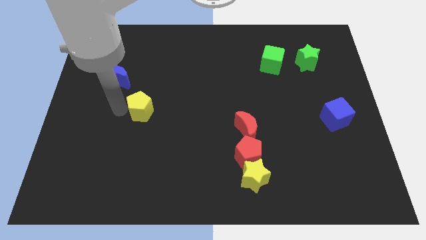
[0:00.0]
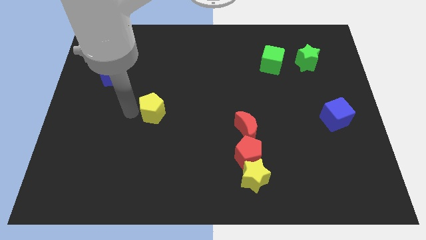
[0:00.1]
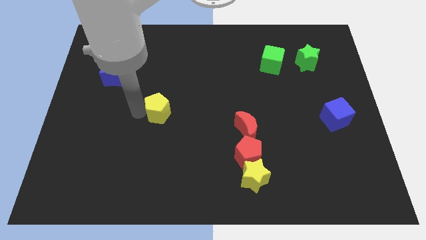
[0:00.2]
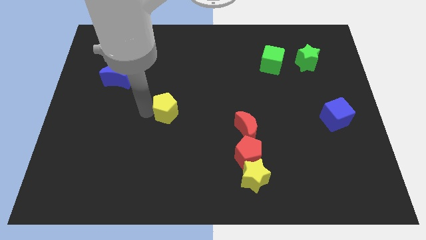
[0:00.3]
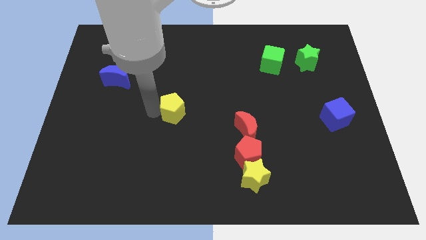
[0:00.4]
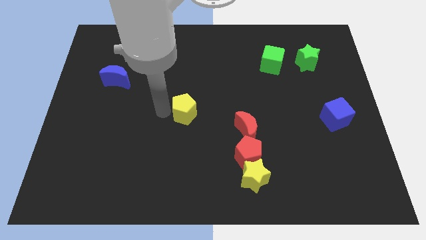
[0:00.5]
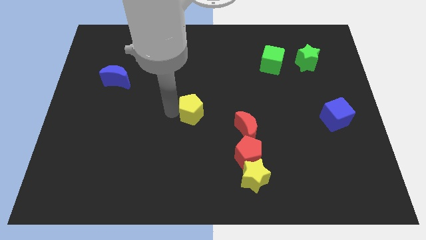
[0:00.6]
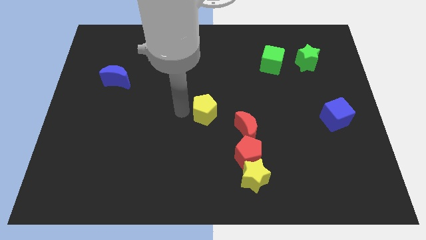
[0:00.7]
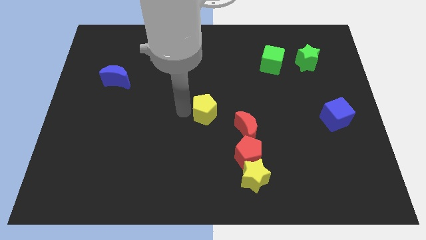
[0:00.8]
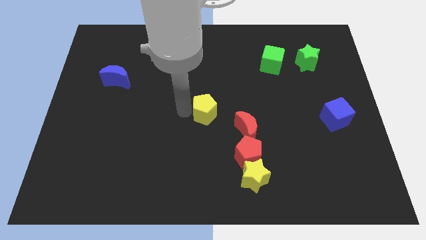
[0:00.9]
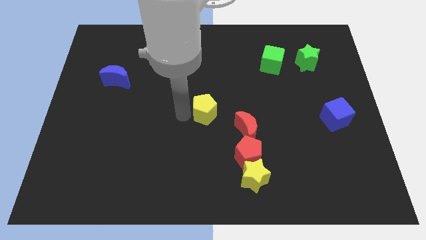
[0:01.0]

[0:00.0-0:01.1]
drag the yellow pentagon to the right

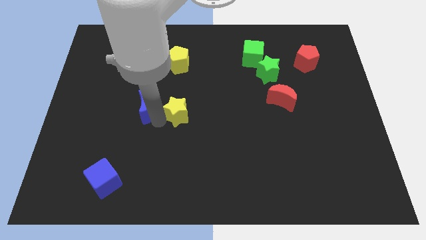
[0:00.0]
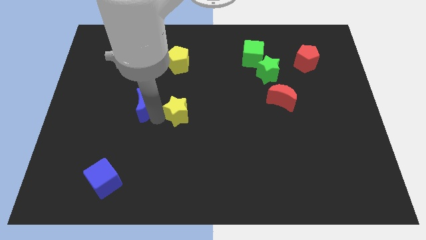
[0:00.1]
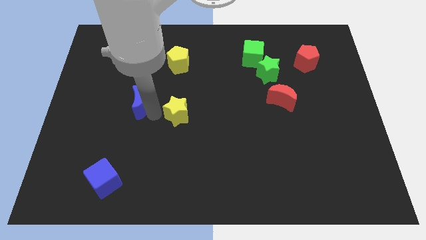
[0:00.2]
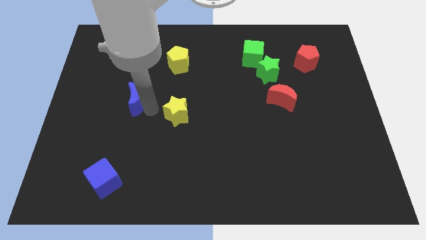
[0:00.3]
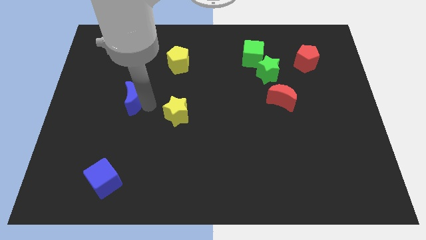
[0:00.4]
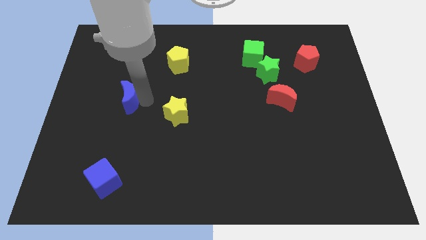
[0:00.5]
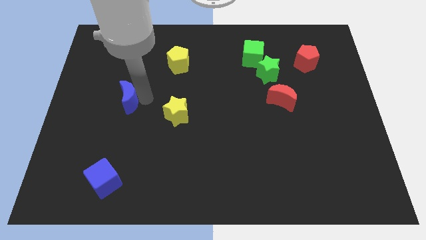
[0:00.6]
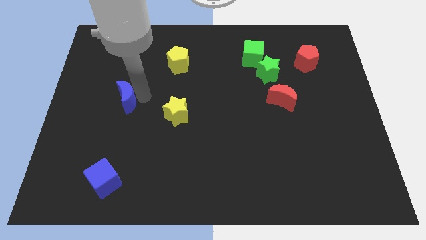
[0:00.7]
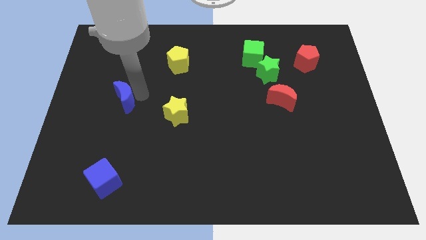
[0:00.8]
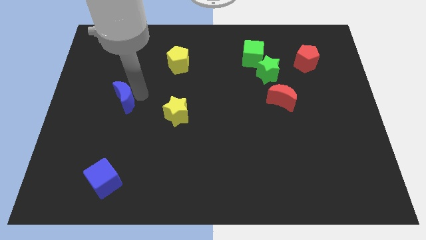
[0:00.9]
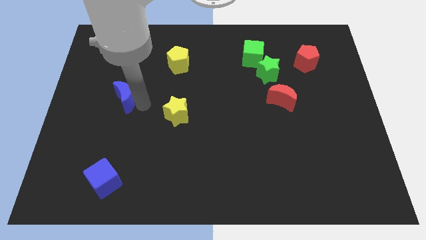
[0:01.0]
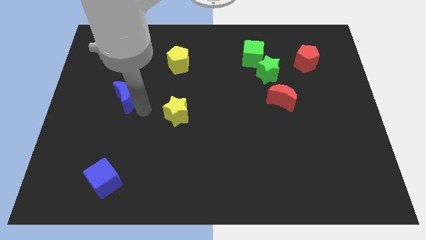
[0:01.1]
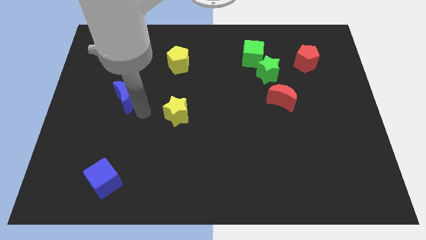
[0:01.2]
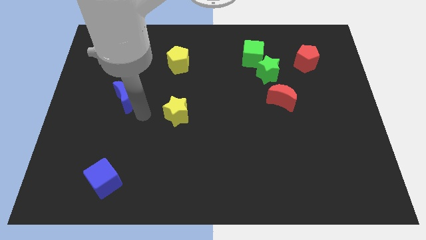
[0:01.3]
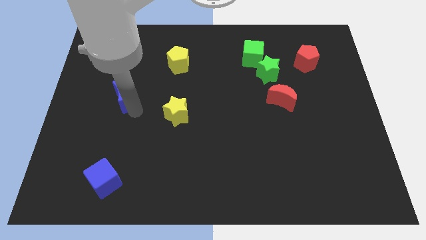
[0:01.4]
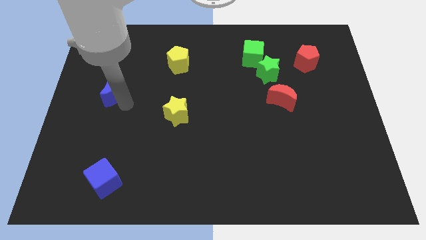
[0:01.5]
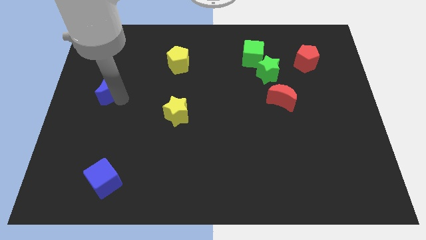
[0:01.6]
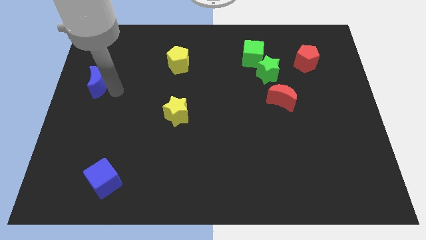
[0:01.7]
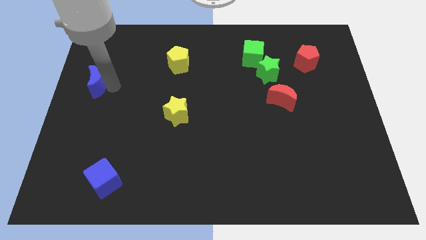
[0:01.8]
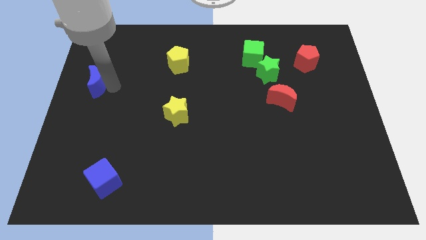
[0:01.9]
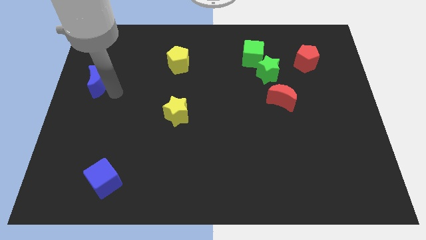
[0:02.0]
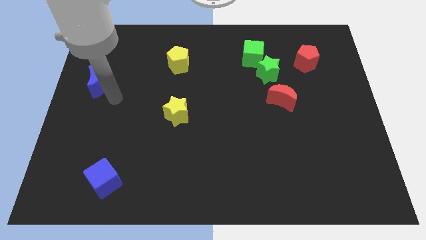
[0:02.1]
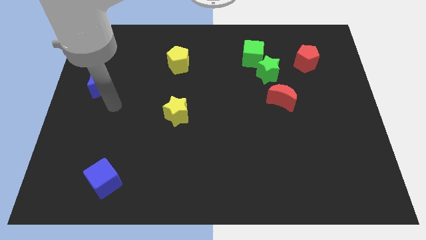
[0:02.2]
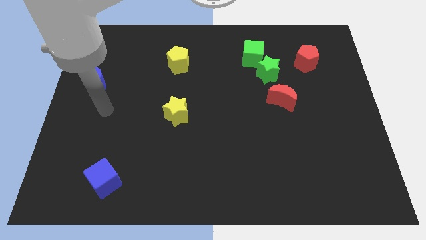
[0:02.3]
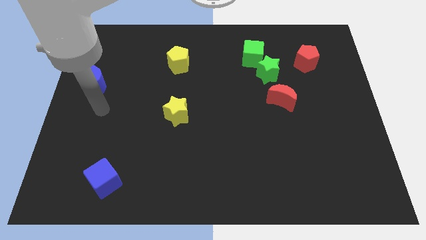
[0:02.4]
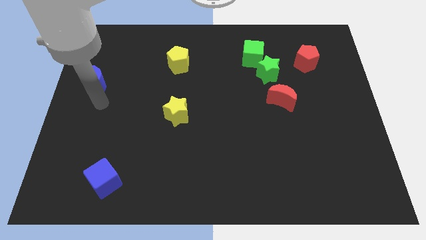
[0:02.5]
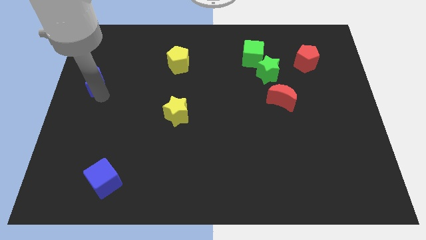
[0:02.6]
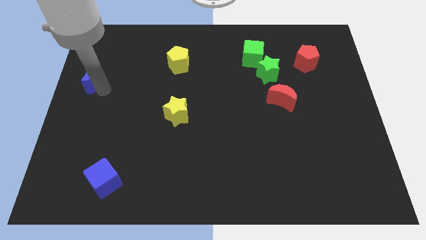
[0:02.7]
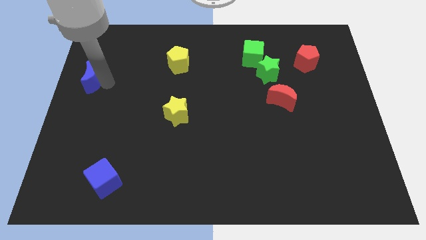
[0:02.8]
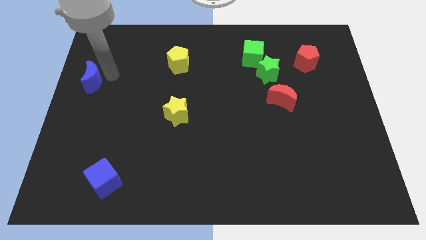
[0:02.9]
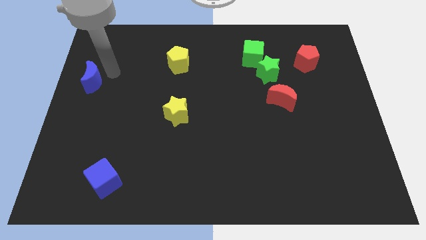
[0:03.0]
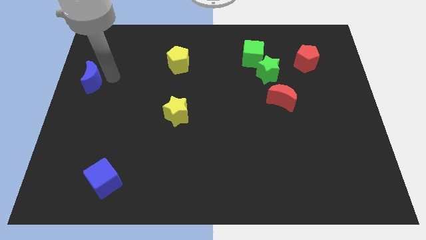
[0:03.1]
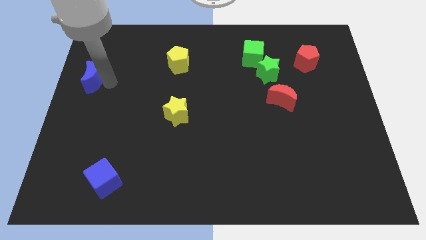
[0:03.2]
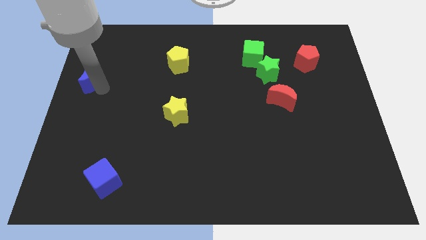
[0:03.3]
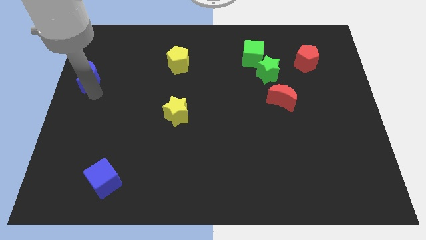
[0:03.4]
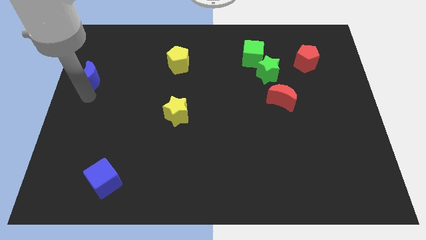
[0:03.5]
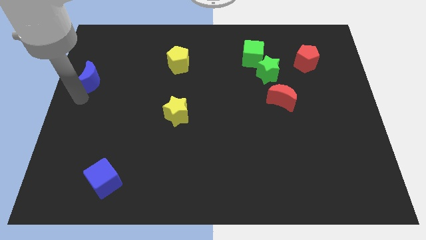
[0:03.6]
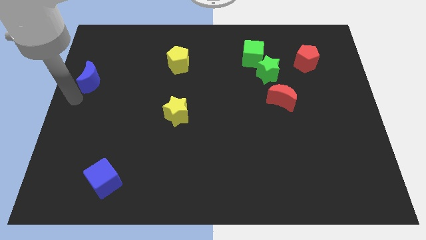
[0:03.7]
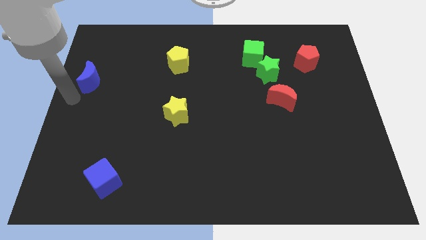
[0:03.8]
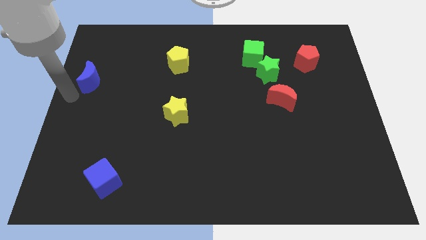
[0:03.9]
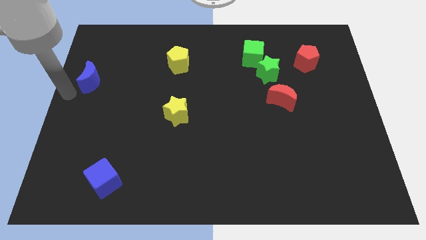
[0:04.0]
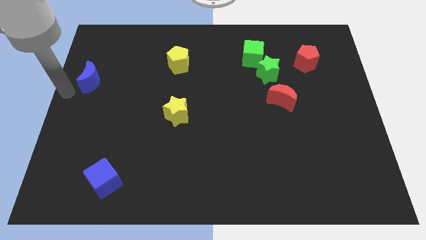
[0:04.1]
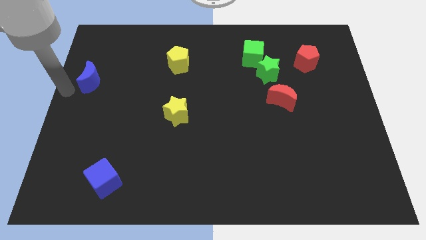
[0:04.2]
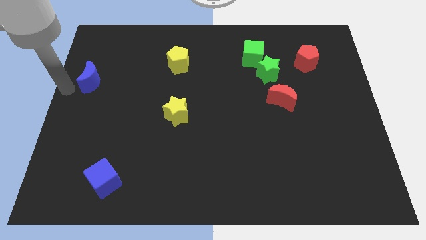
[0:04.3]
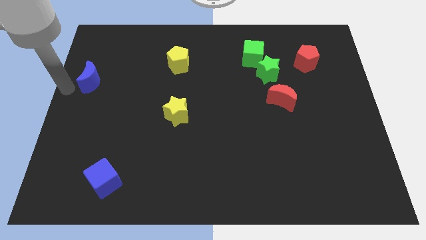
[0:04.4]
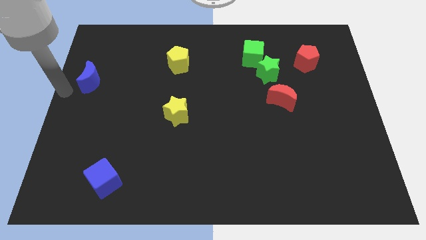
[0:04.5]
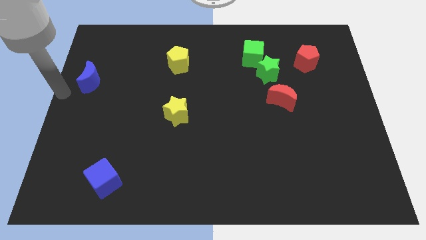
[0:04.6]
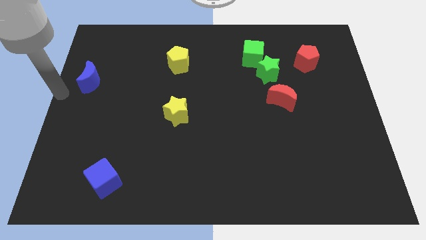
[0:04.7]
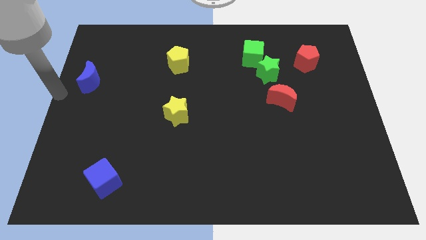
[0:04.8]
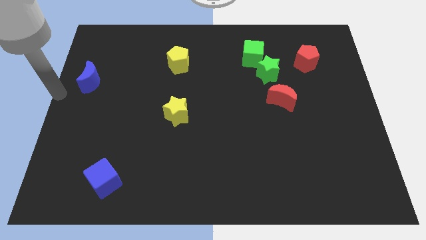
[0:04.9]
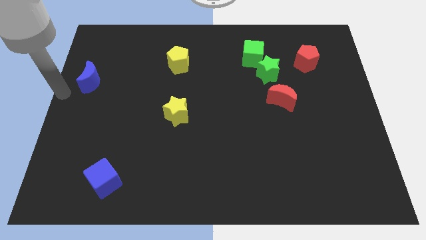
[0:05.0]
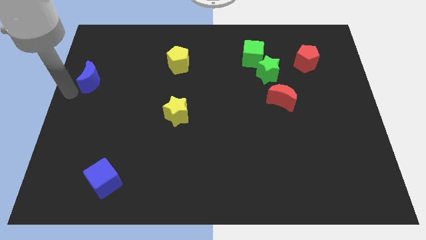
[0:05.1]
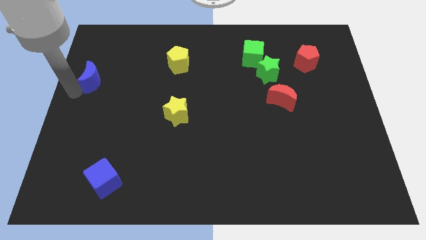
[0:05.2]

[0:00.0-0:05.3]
place the blue crescent above the blue cube

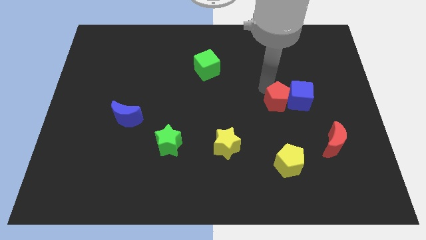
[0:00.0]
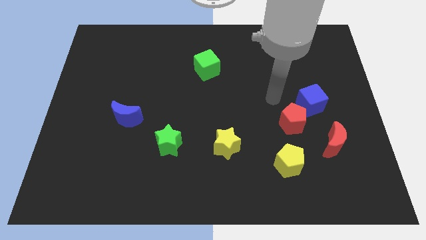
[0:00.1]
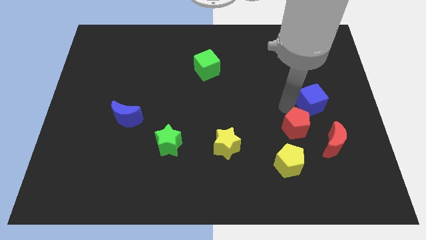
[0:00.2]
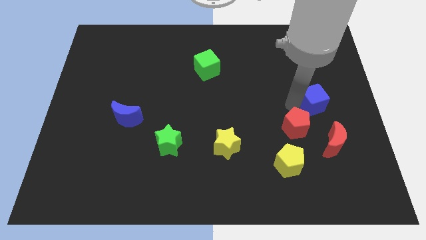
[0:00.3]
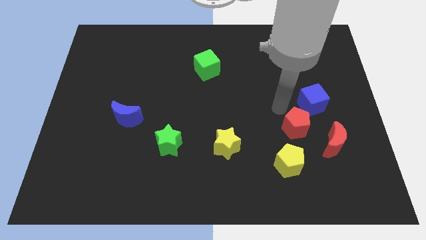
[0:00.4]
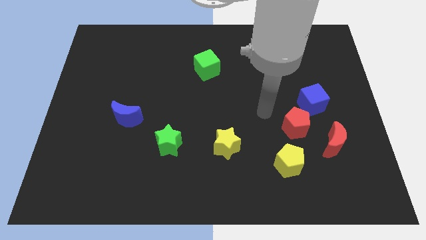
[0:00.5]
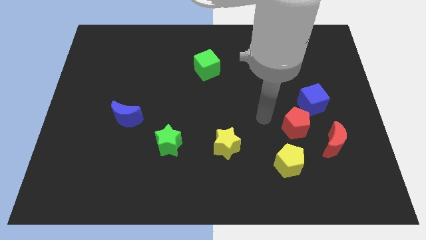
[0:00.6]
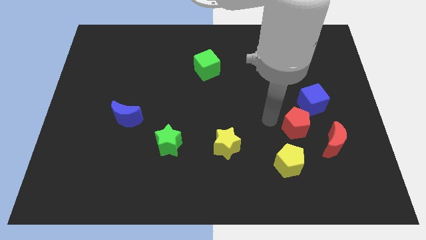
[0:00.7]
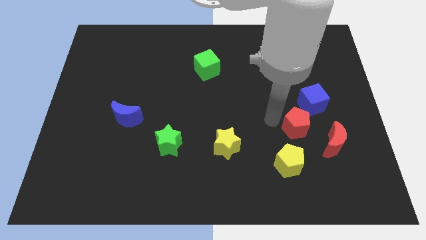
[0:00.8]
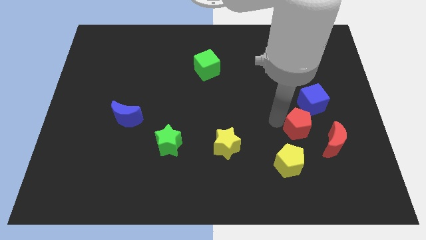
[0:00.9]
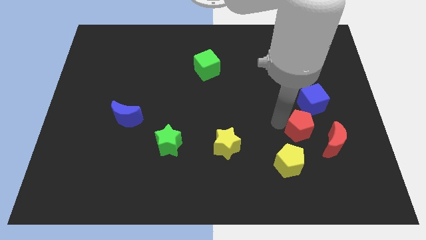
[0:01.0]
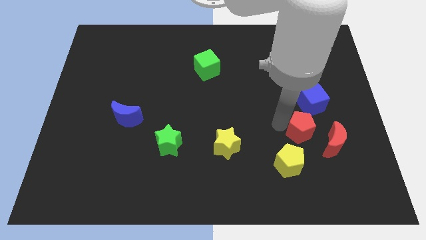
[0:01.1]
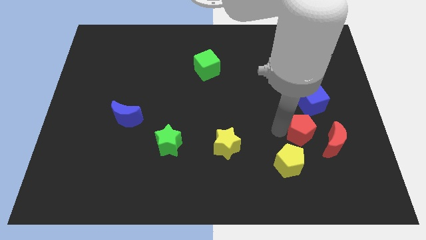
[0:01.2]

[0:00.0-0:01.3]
push red pentagon to the bottom left to the blue cube

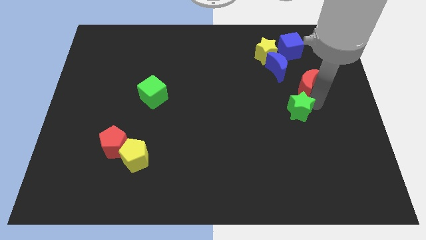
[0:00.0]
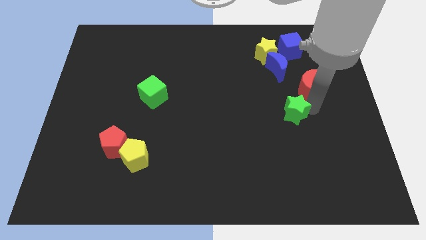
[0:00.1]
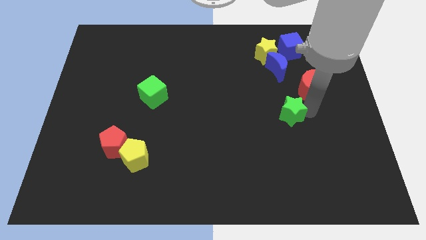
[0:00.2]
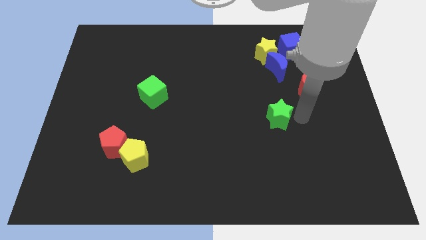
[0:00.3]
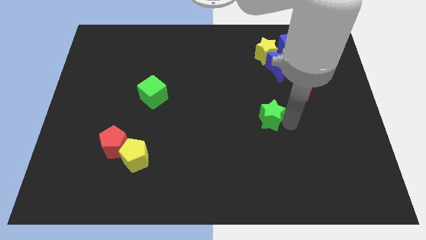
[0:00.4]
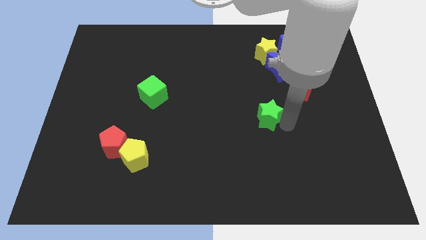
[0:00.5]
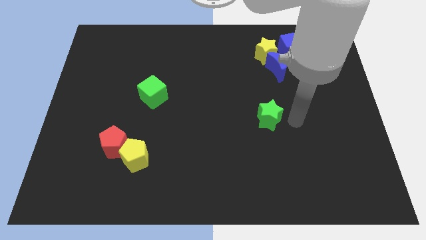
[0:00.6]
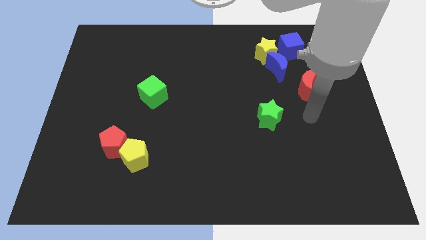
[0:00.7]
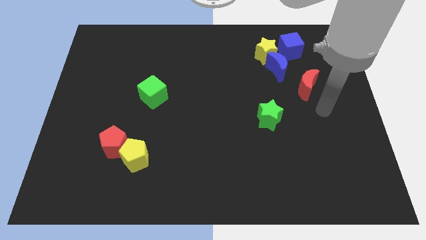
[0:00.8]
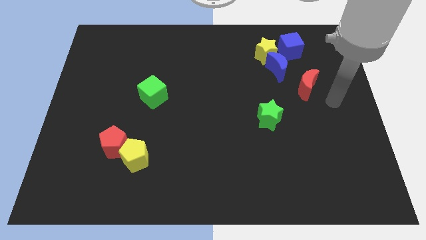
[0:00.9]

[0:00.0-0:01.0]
slide the green star slightly to the left

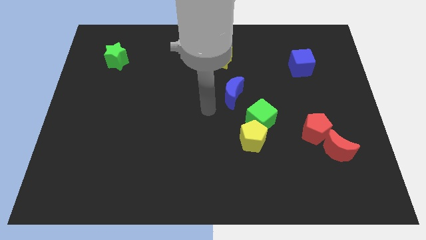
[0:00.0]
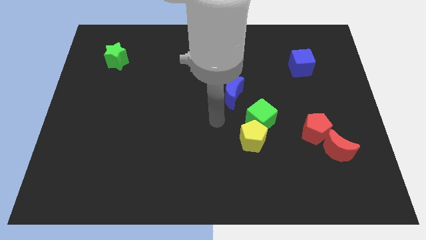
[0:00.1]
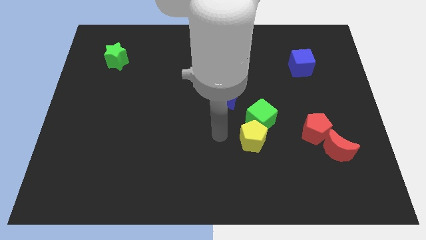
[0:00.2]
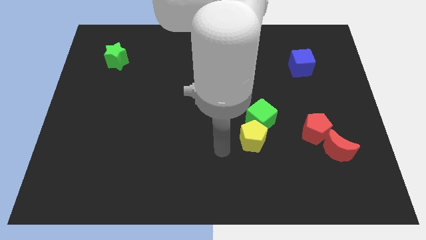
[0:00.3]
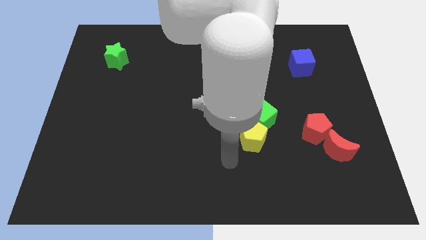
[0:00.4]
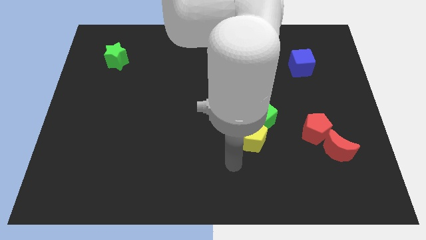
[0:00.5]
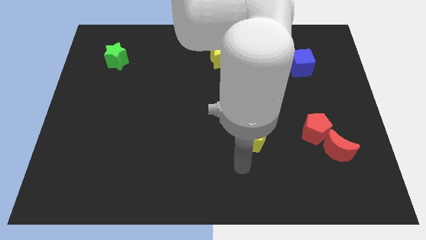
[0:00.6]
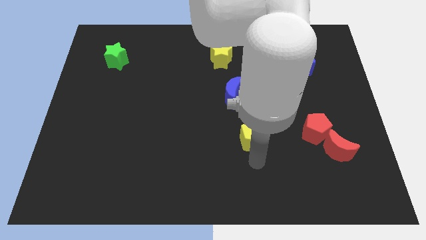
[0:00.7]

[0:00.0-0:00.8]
point your arm at the bottom of the yellow pentagon
